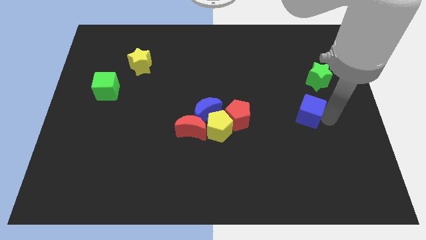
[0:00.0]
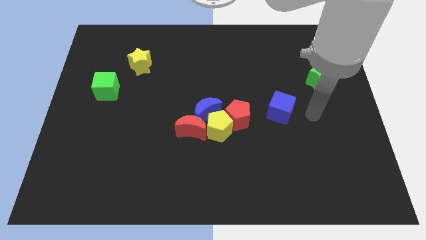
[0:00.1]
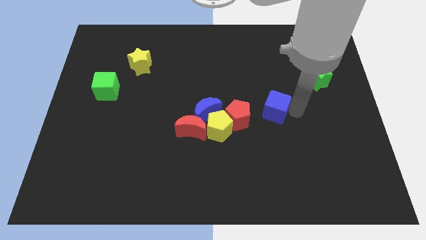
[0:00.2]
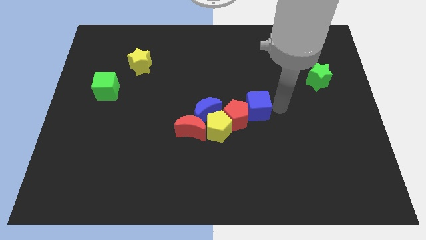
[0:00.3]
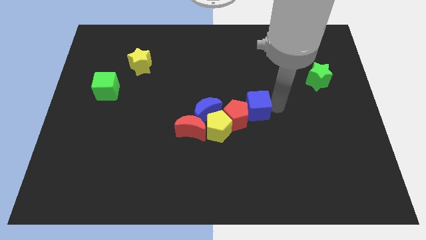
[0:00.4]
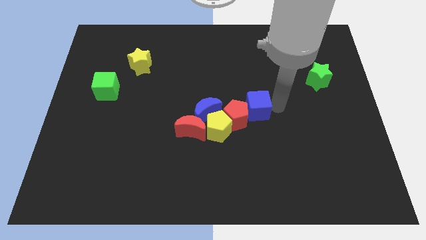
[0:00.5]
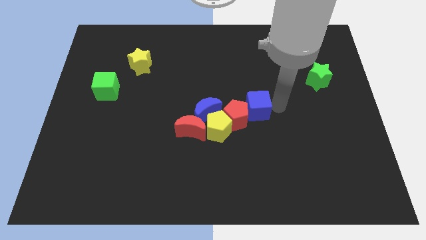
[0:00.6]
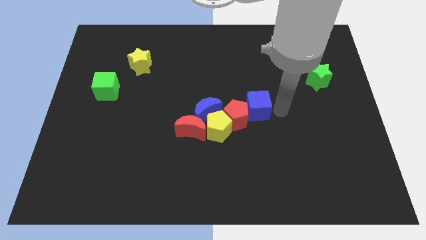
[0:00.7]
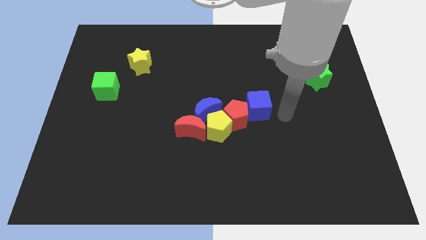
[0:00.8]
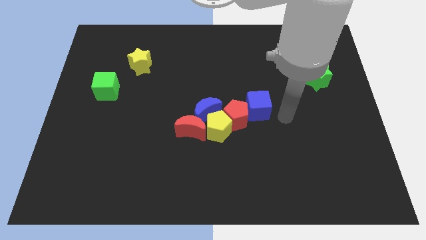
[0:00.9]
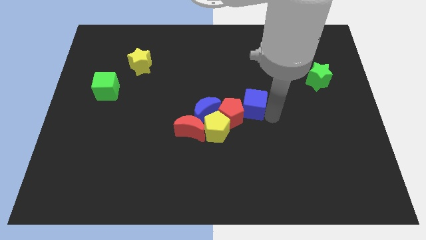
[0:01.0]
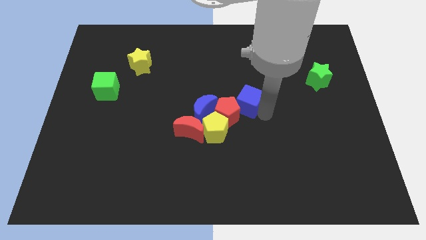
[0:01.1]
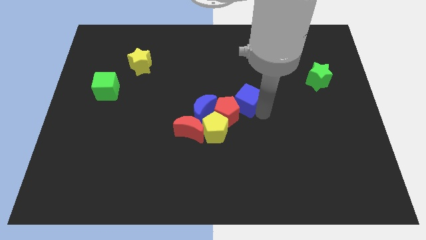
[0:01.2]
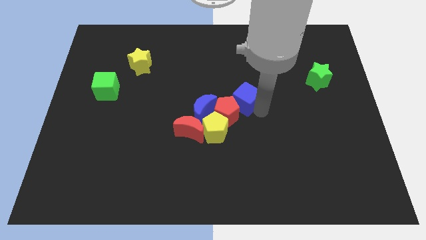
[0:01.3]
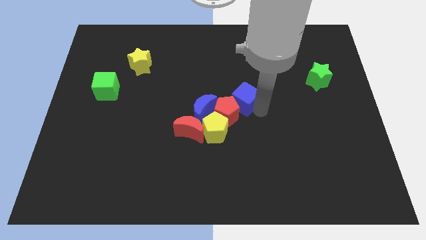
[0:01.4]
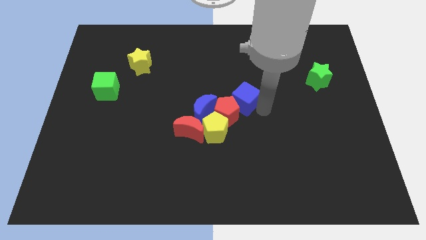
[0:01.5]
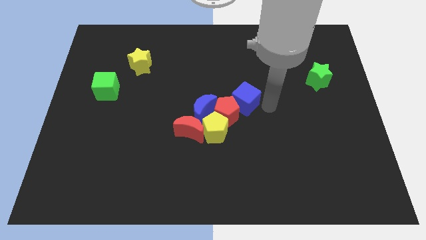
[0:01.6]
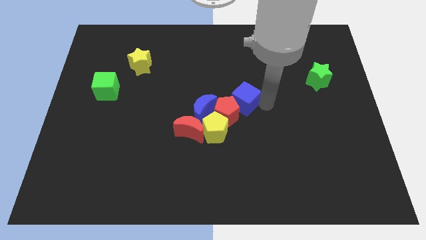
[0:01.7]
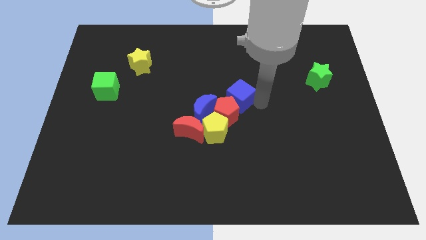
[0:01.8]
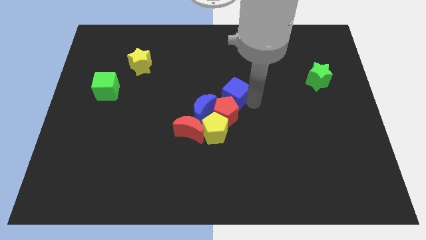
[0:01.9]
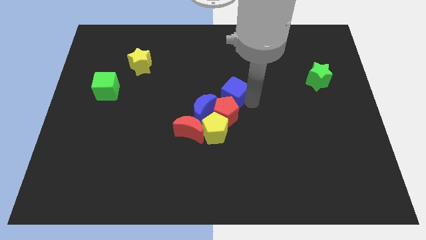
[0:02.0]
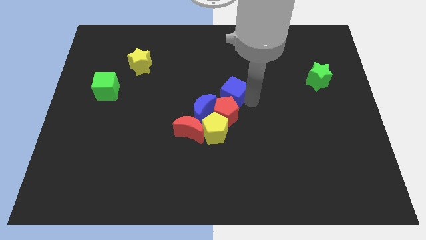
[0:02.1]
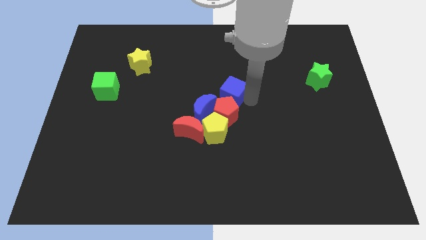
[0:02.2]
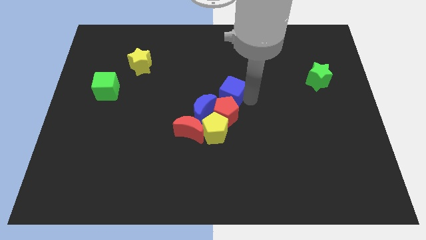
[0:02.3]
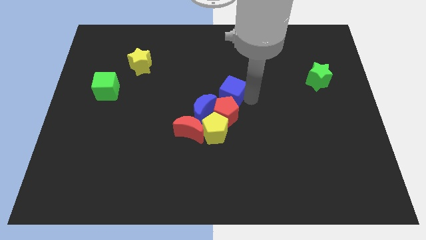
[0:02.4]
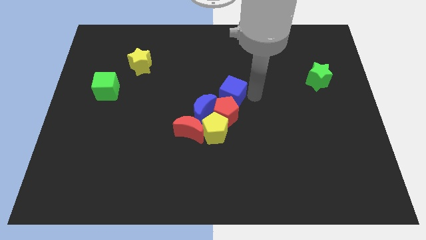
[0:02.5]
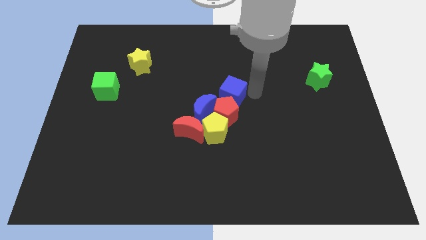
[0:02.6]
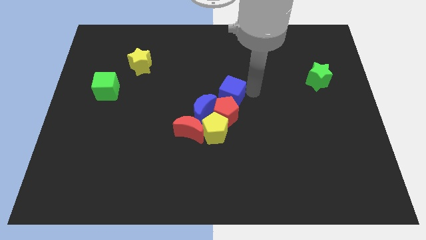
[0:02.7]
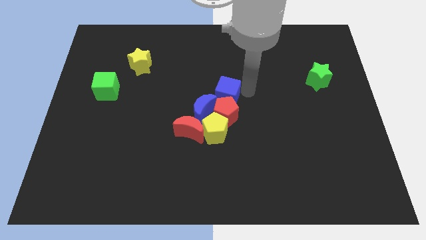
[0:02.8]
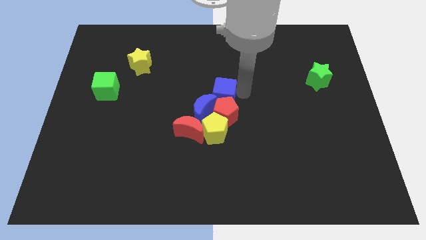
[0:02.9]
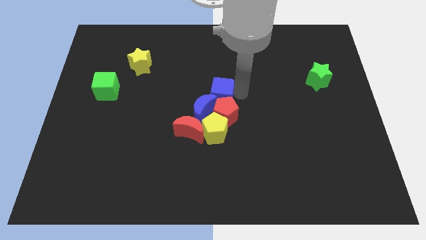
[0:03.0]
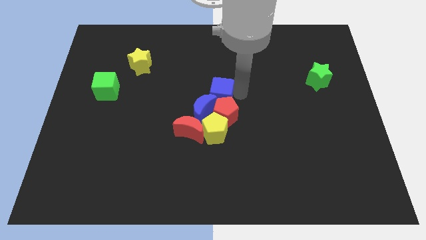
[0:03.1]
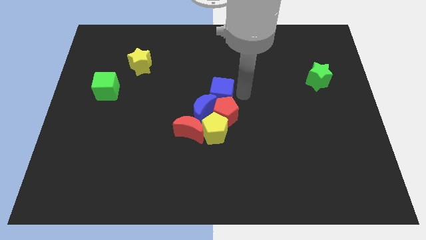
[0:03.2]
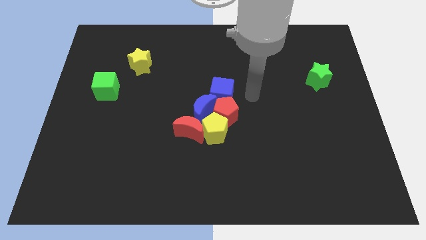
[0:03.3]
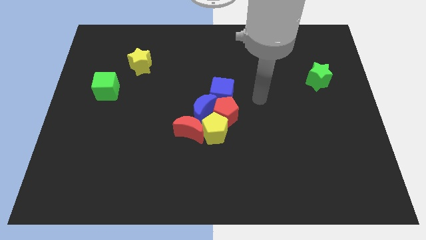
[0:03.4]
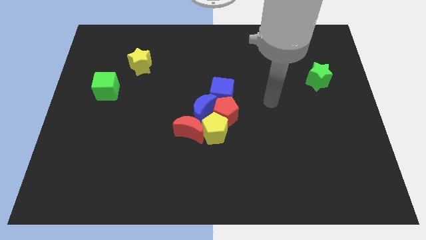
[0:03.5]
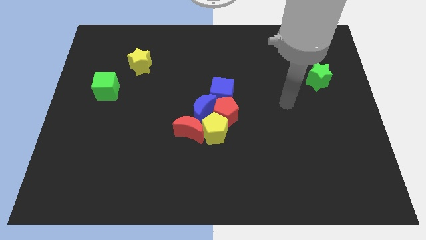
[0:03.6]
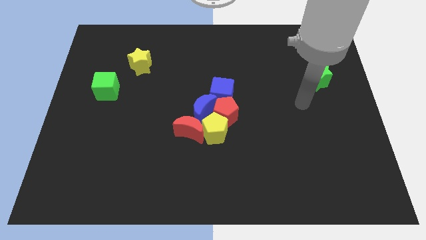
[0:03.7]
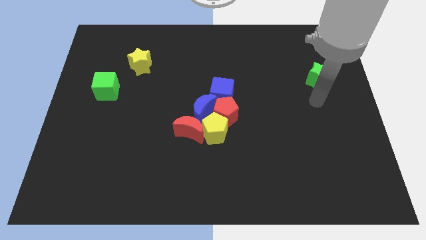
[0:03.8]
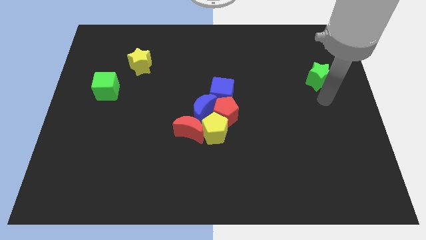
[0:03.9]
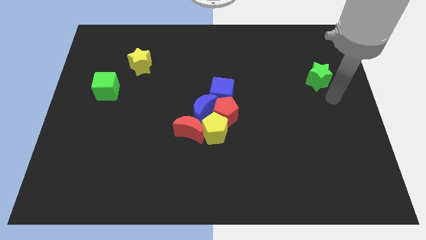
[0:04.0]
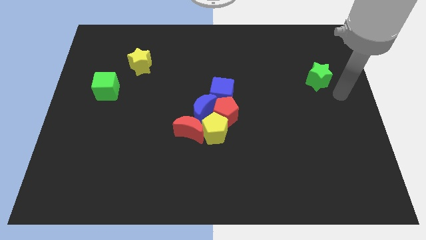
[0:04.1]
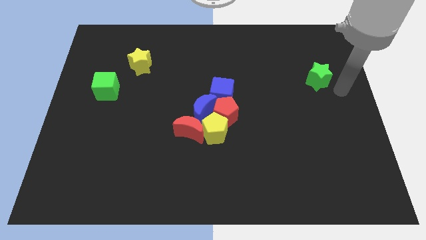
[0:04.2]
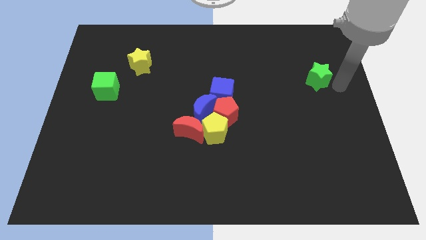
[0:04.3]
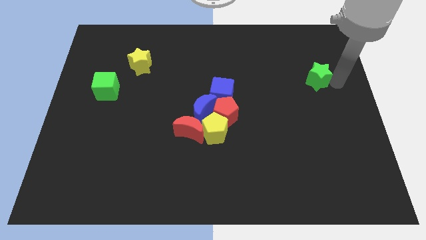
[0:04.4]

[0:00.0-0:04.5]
move blue cube diagonally above blue moon

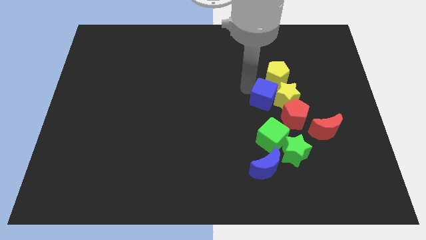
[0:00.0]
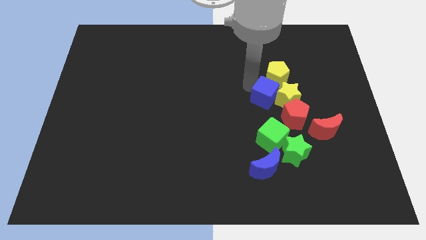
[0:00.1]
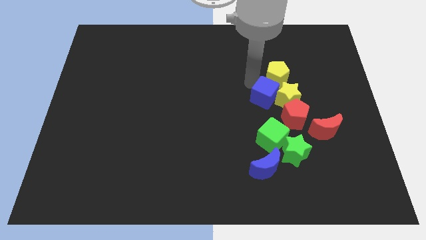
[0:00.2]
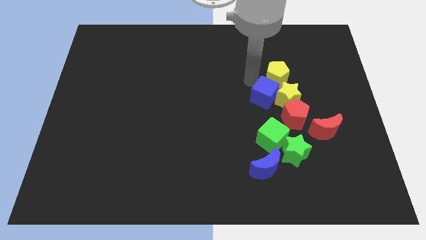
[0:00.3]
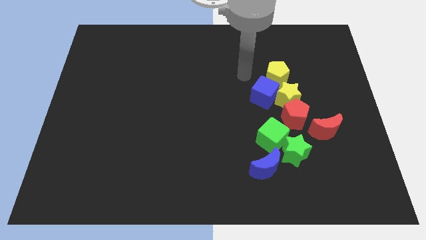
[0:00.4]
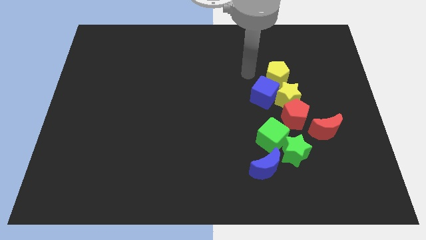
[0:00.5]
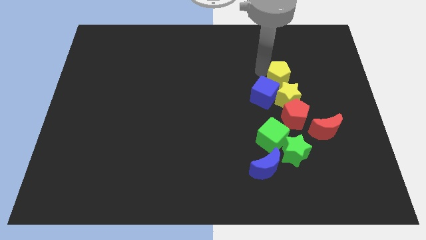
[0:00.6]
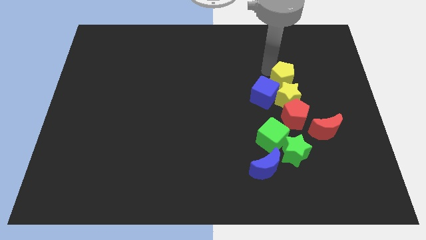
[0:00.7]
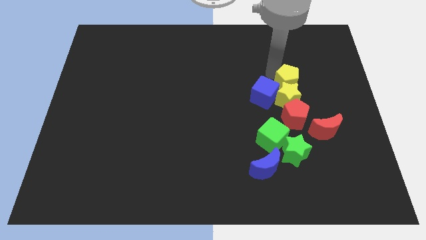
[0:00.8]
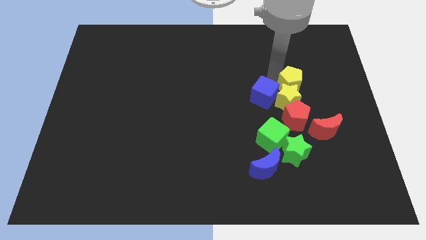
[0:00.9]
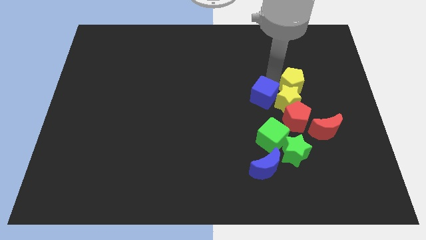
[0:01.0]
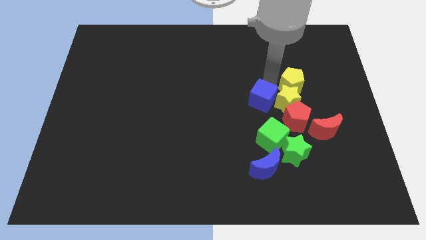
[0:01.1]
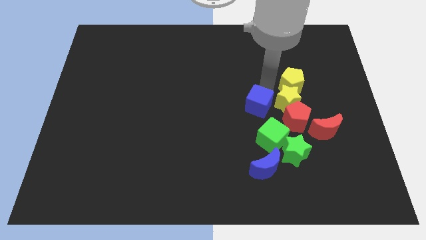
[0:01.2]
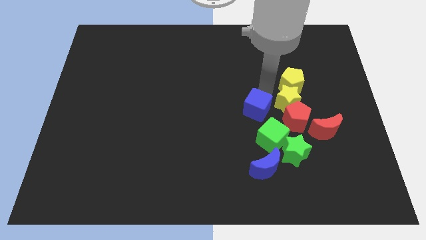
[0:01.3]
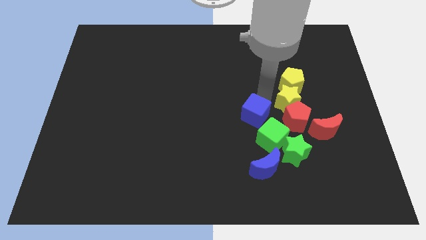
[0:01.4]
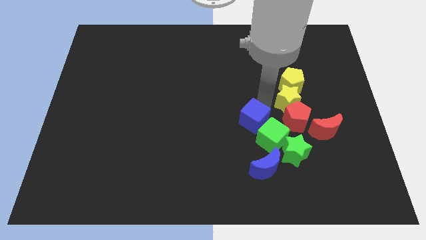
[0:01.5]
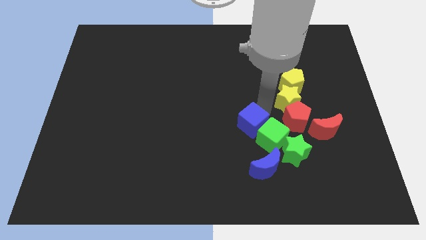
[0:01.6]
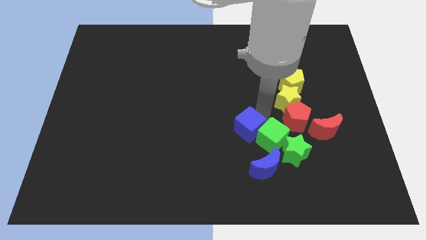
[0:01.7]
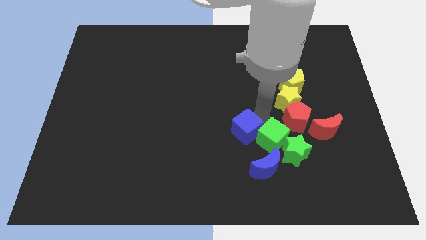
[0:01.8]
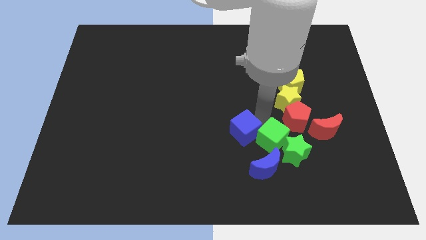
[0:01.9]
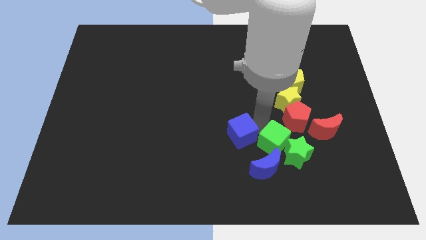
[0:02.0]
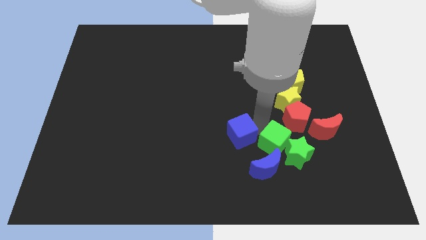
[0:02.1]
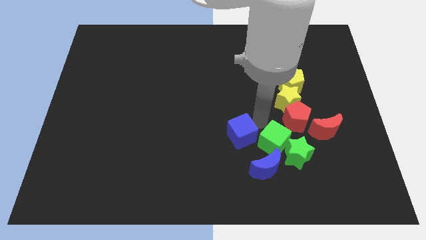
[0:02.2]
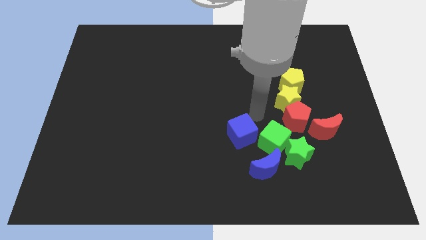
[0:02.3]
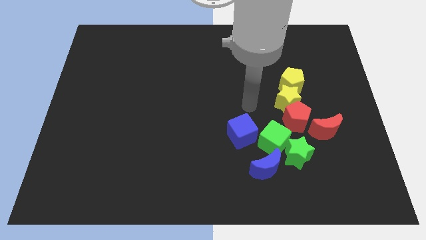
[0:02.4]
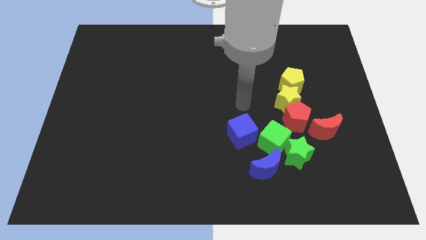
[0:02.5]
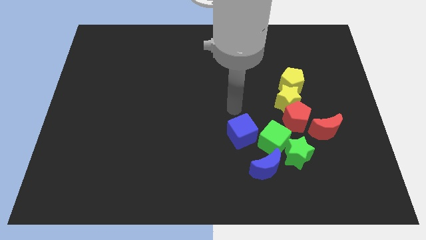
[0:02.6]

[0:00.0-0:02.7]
move the blue cube slightly down

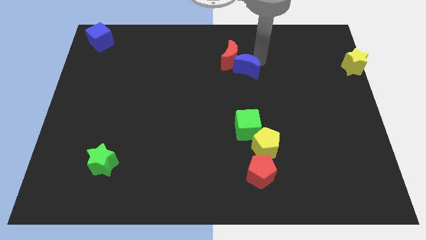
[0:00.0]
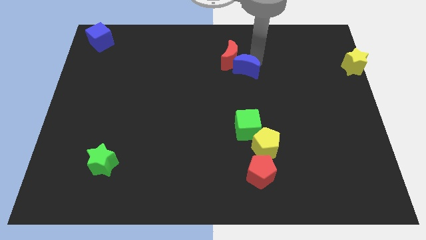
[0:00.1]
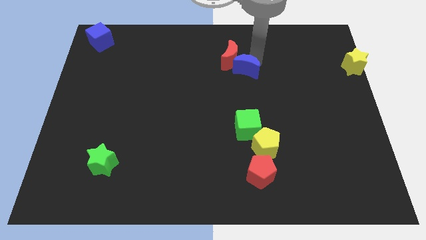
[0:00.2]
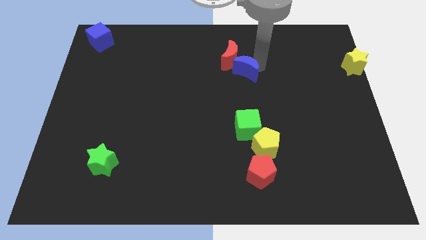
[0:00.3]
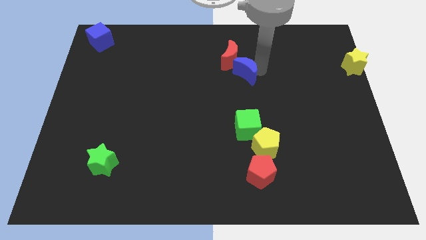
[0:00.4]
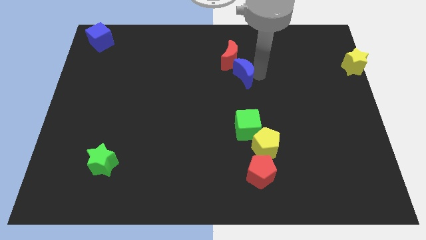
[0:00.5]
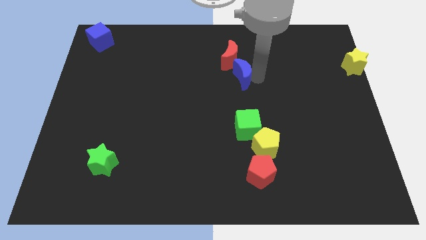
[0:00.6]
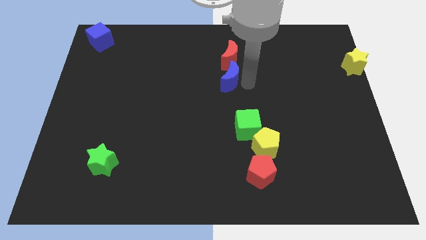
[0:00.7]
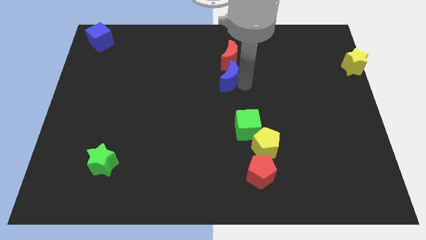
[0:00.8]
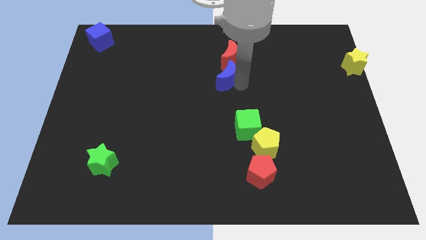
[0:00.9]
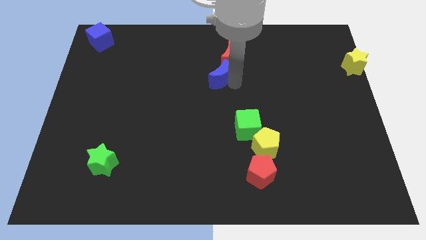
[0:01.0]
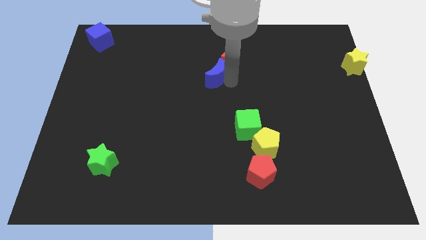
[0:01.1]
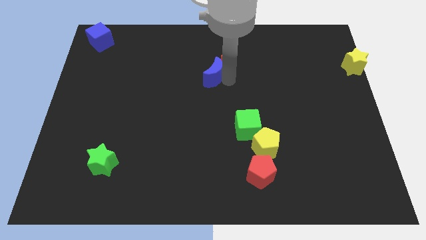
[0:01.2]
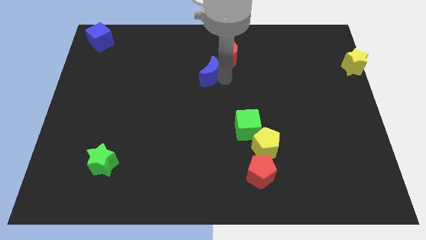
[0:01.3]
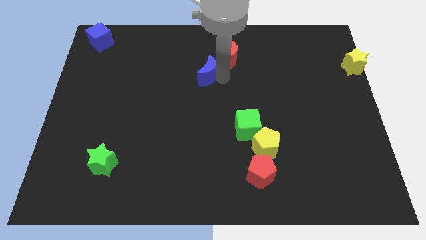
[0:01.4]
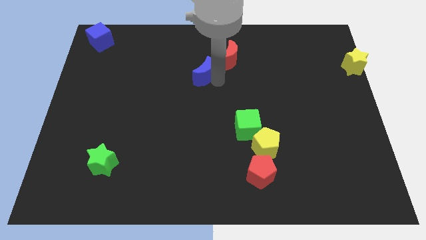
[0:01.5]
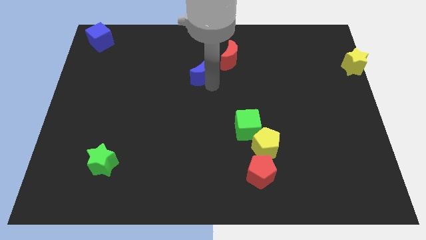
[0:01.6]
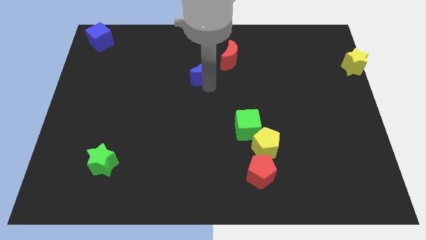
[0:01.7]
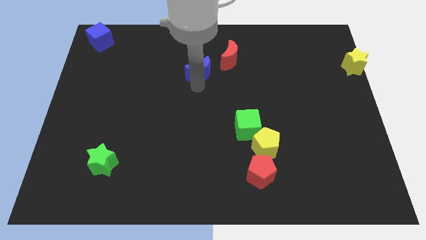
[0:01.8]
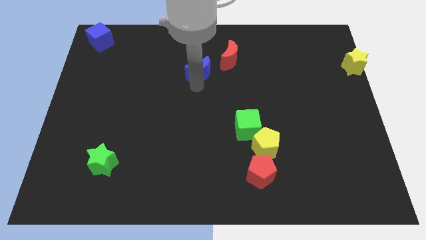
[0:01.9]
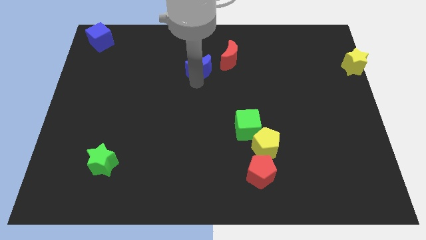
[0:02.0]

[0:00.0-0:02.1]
separate blue moon from red moon
